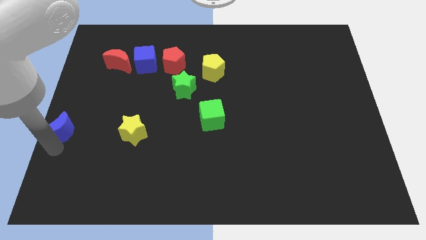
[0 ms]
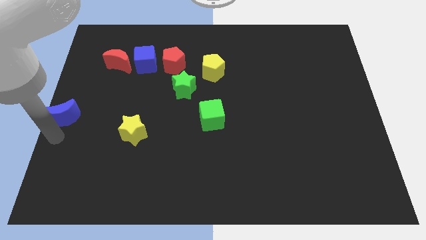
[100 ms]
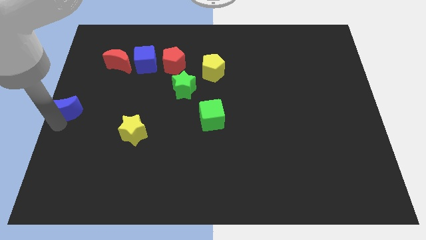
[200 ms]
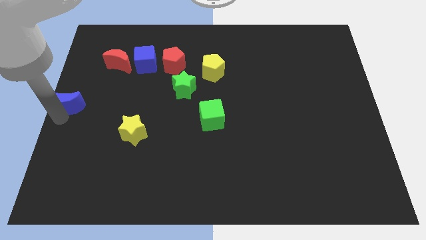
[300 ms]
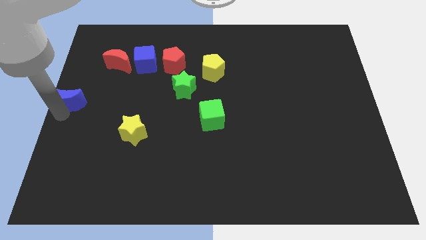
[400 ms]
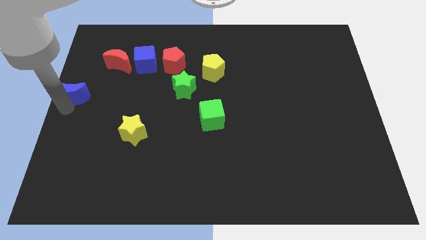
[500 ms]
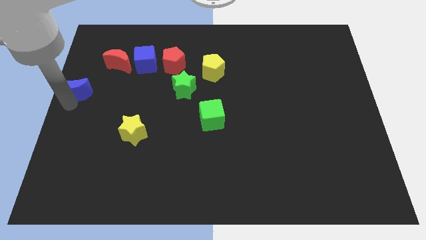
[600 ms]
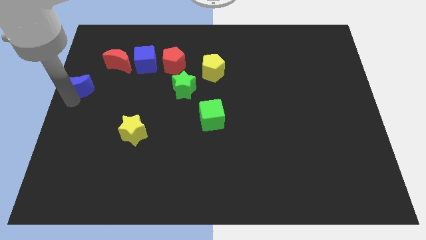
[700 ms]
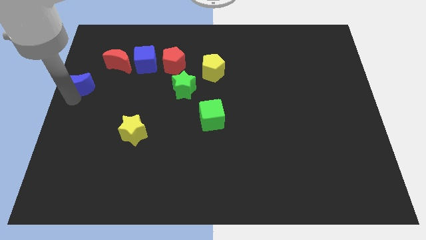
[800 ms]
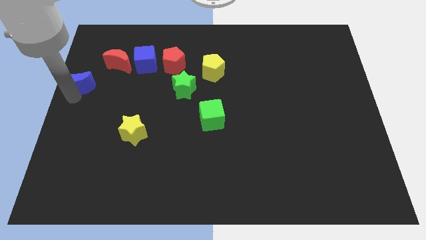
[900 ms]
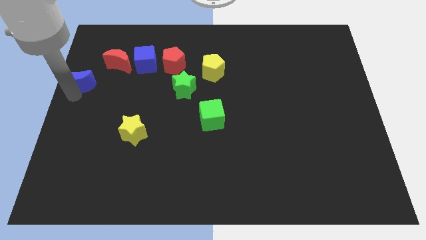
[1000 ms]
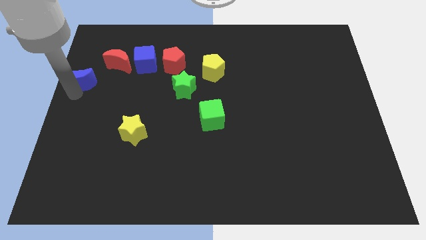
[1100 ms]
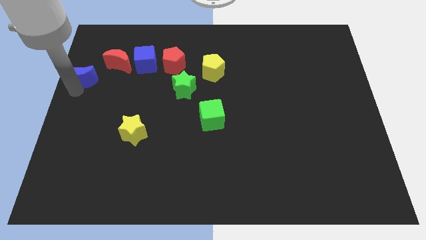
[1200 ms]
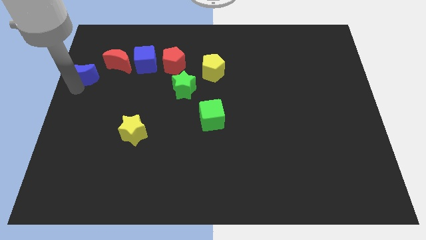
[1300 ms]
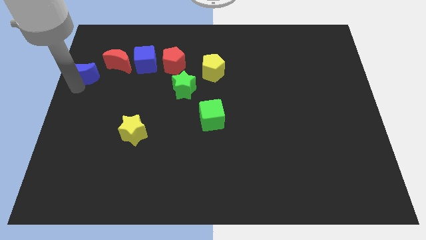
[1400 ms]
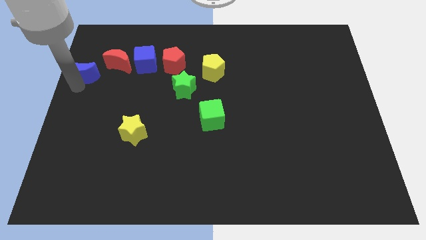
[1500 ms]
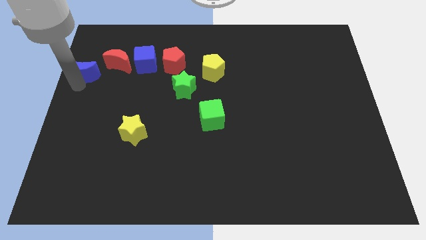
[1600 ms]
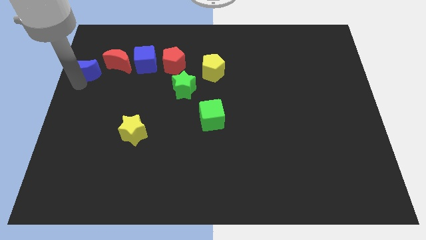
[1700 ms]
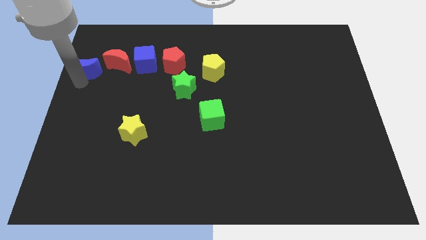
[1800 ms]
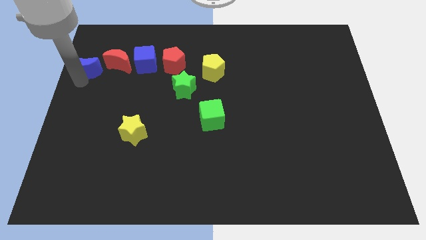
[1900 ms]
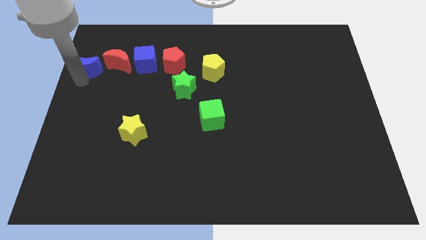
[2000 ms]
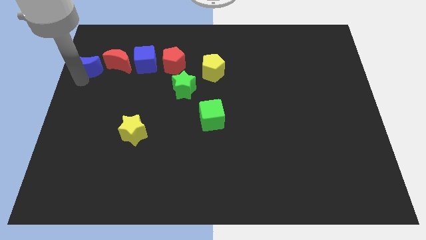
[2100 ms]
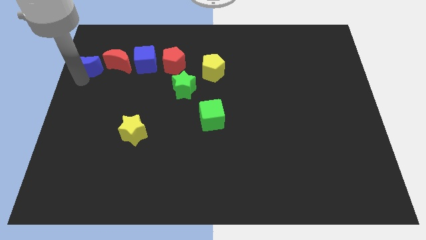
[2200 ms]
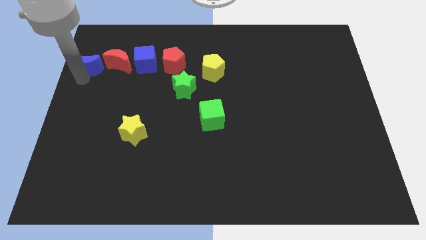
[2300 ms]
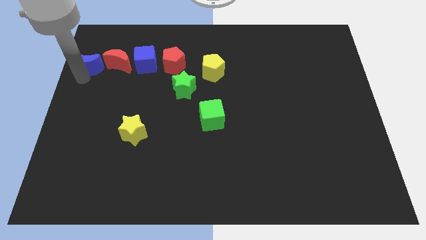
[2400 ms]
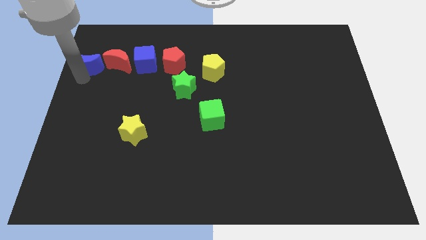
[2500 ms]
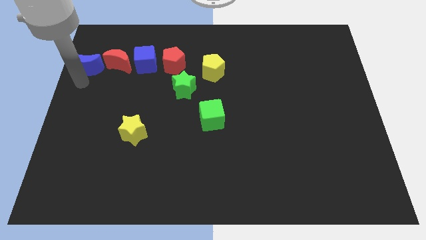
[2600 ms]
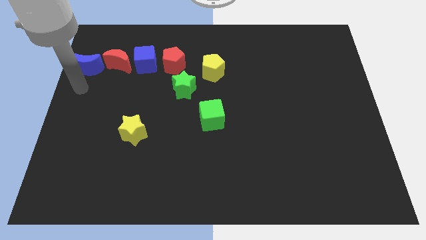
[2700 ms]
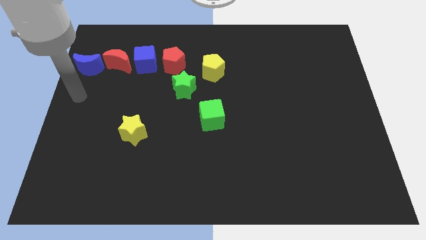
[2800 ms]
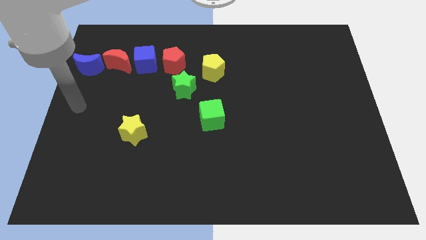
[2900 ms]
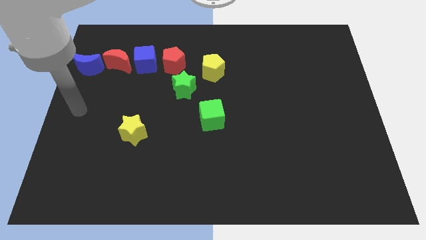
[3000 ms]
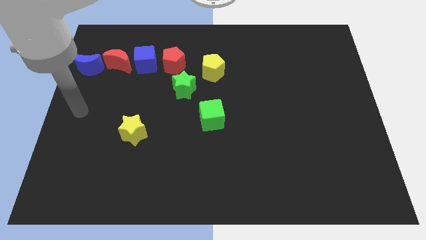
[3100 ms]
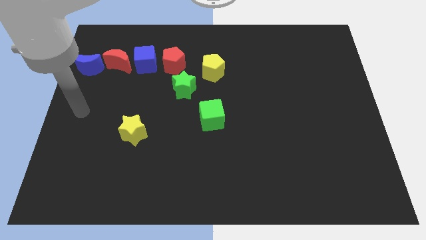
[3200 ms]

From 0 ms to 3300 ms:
push the blue crescent beside the red moon

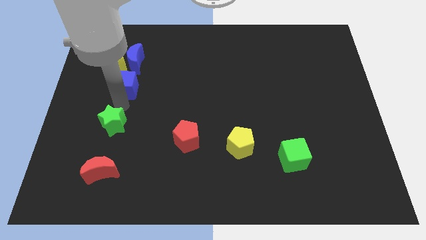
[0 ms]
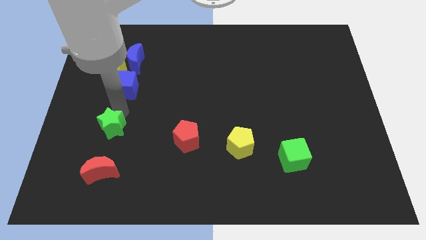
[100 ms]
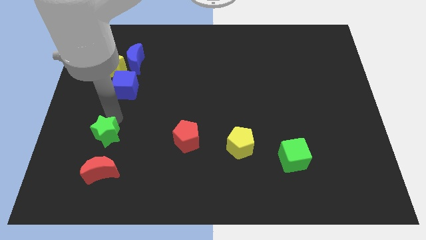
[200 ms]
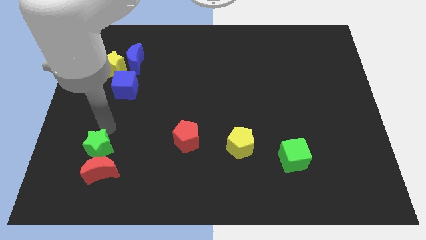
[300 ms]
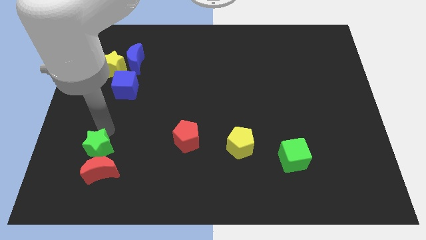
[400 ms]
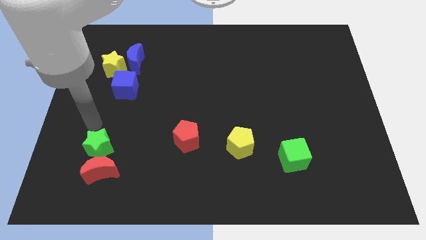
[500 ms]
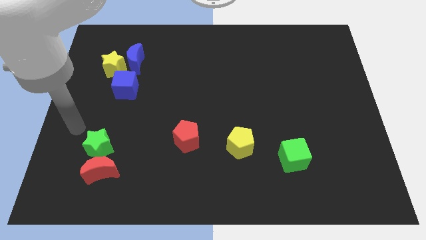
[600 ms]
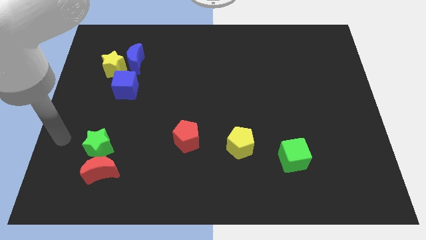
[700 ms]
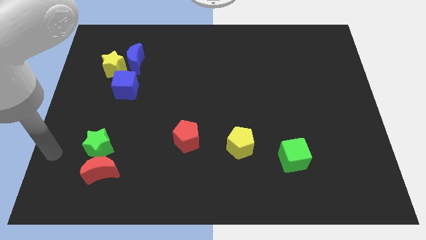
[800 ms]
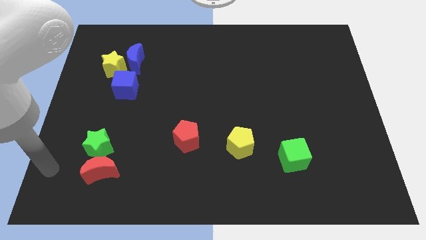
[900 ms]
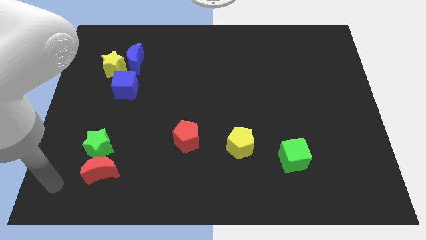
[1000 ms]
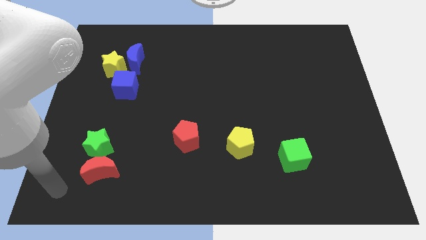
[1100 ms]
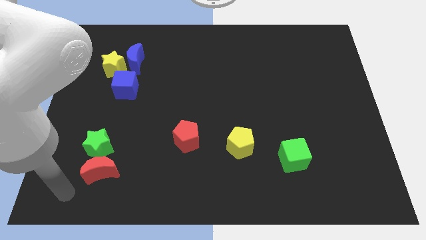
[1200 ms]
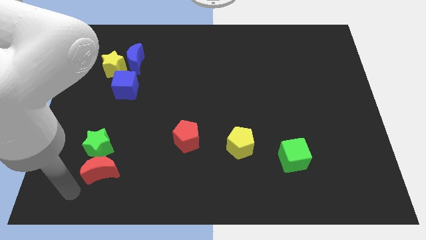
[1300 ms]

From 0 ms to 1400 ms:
move the green star to the top side of the red moon

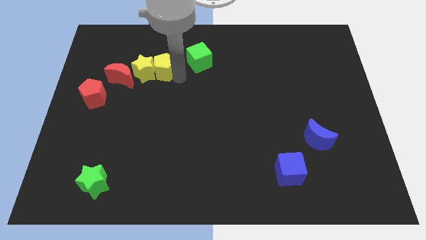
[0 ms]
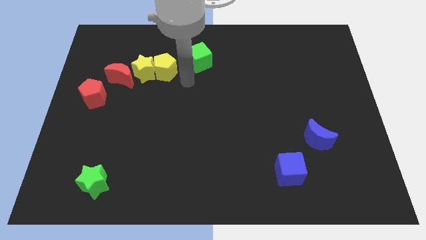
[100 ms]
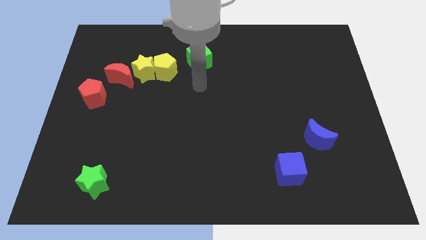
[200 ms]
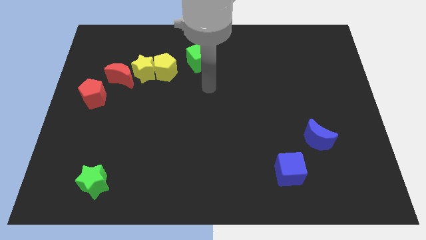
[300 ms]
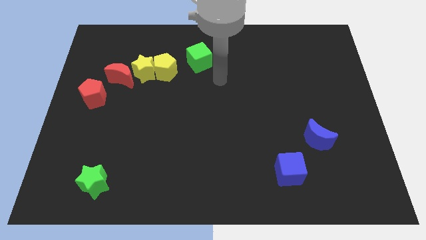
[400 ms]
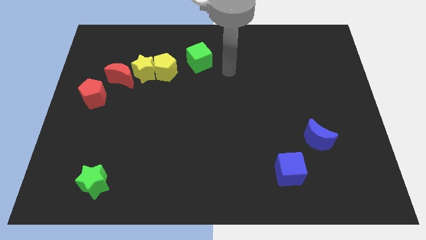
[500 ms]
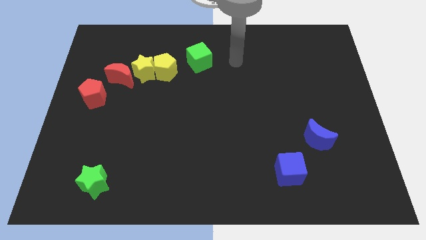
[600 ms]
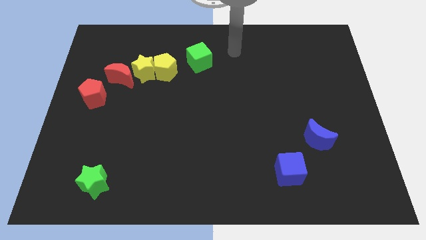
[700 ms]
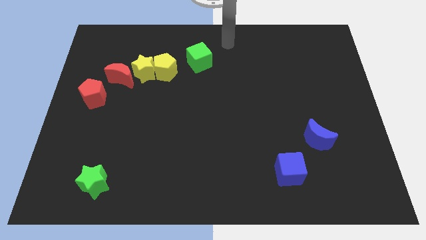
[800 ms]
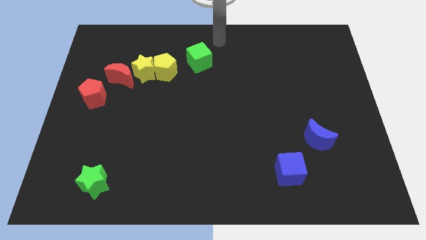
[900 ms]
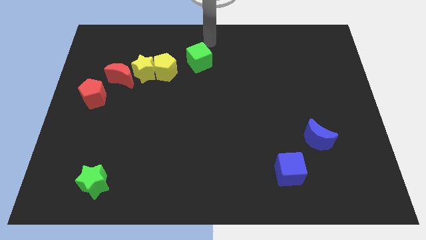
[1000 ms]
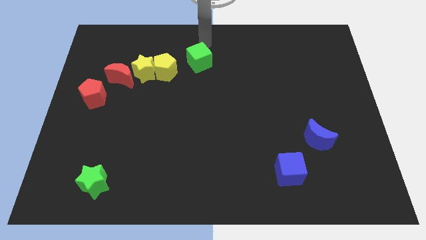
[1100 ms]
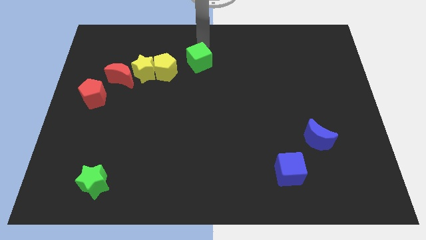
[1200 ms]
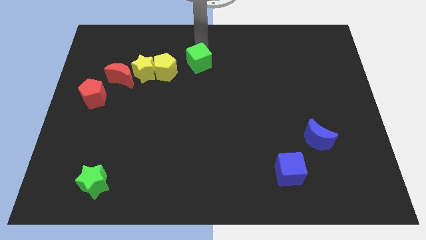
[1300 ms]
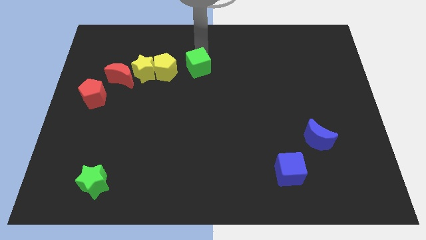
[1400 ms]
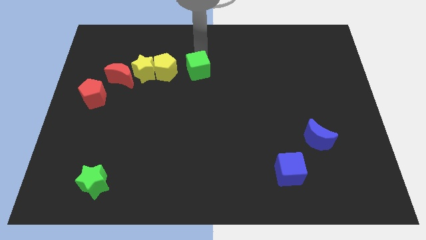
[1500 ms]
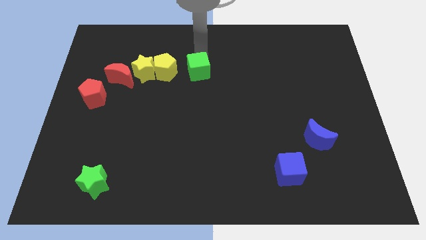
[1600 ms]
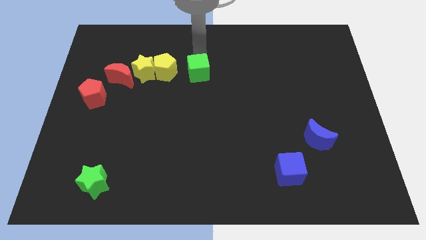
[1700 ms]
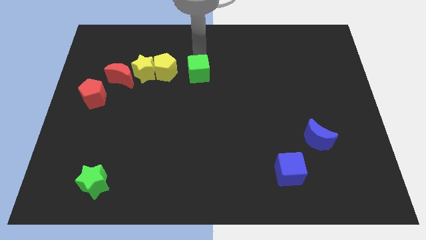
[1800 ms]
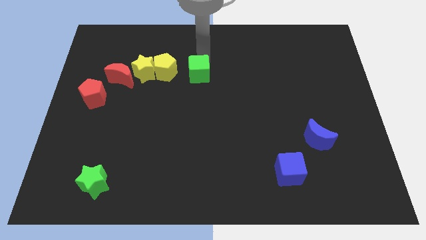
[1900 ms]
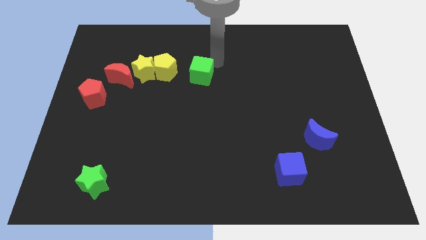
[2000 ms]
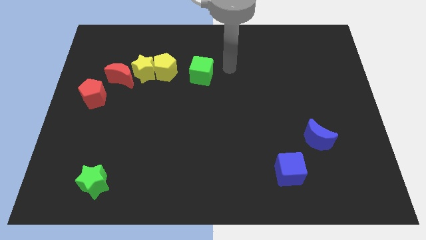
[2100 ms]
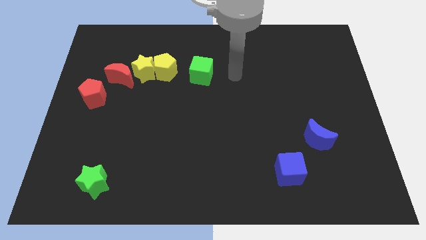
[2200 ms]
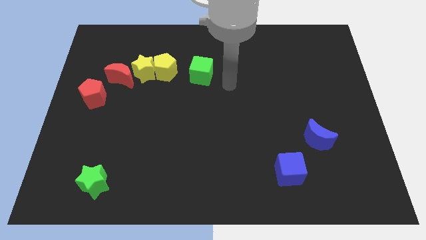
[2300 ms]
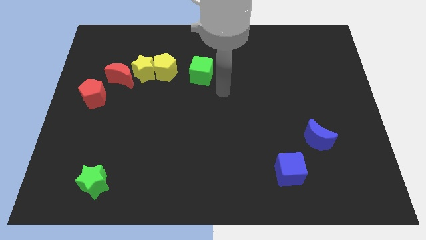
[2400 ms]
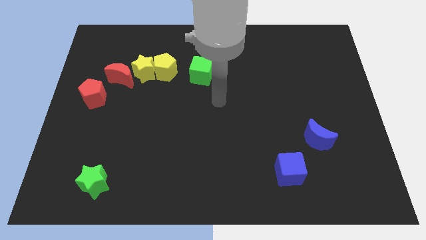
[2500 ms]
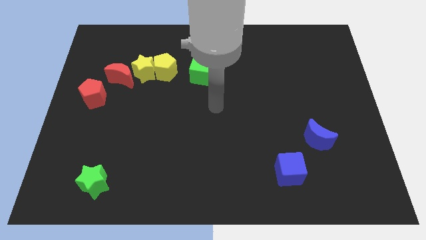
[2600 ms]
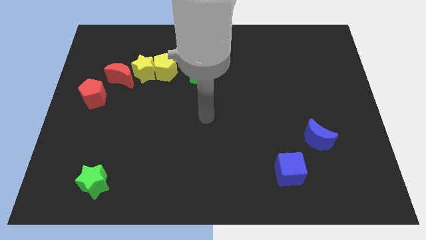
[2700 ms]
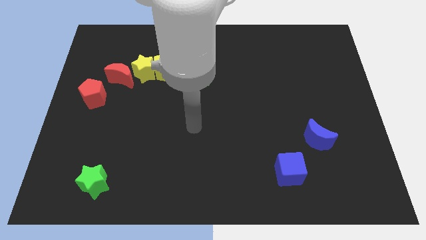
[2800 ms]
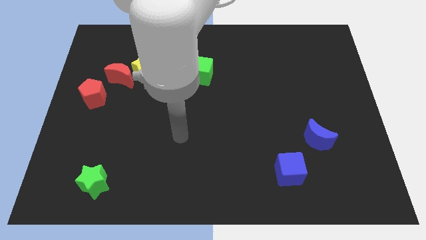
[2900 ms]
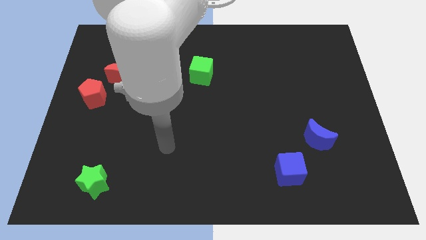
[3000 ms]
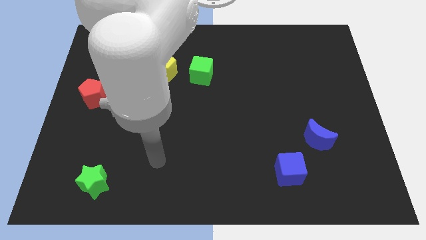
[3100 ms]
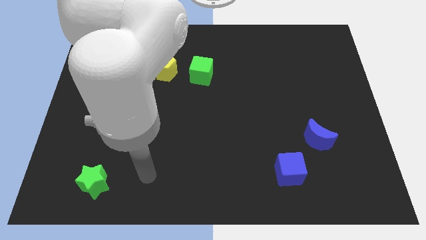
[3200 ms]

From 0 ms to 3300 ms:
place the green cube parallel to yellow pentagon

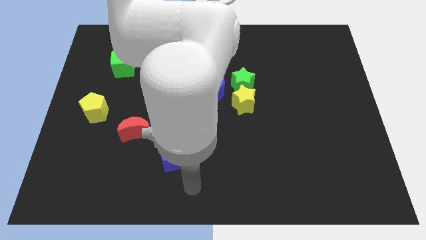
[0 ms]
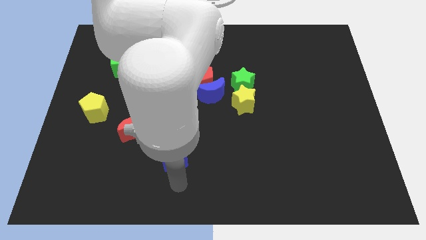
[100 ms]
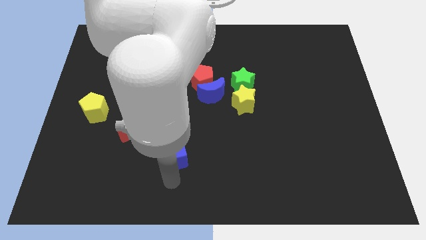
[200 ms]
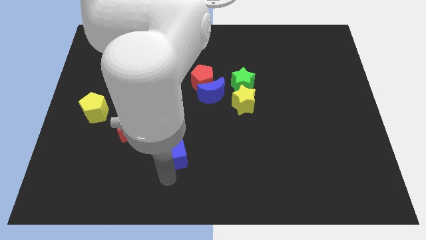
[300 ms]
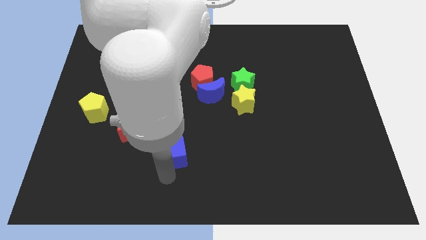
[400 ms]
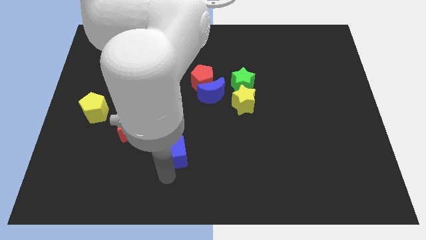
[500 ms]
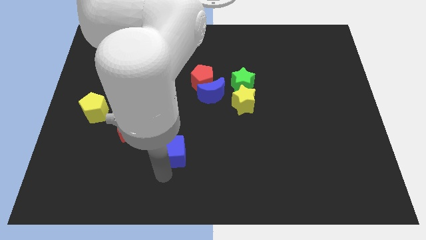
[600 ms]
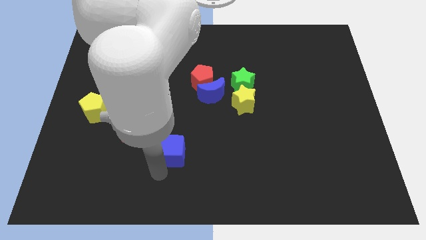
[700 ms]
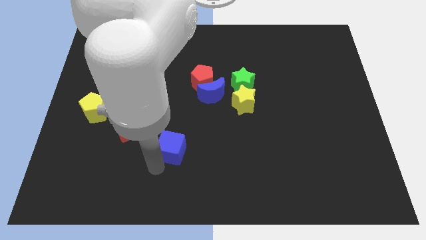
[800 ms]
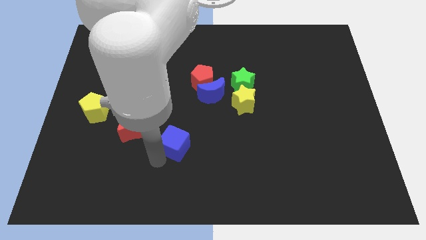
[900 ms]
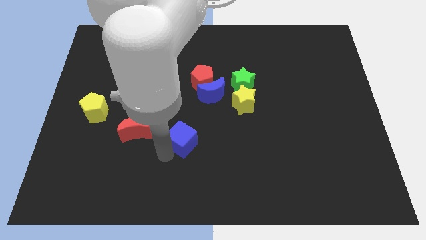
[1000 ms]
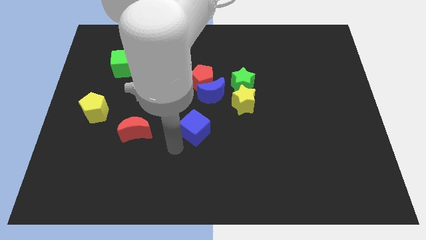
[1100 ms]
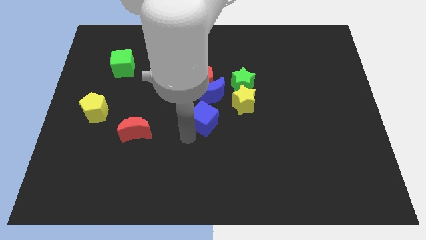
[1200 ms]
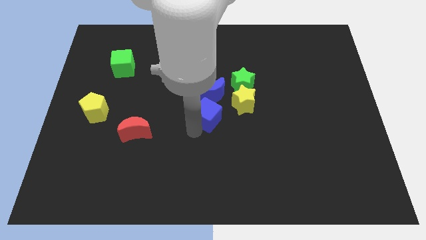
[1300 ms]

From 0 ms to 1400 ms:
move the blue cube below the blue crescent
